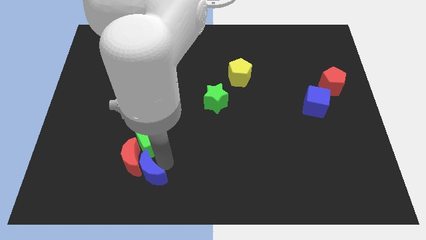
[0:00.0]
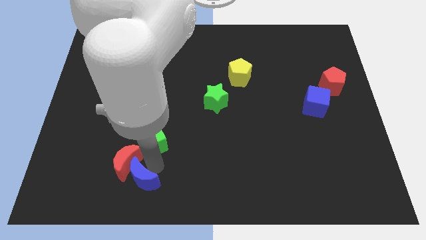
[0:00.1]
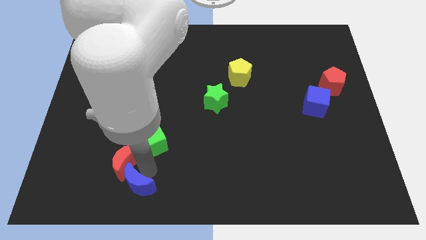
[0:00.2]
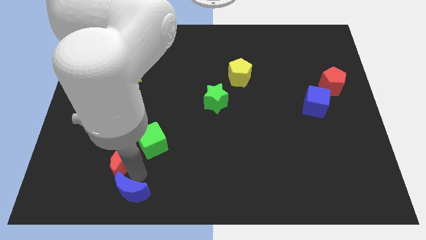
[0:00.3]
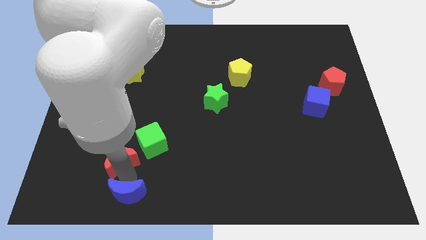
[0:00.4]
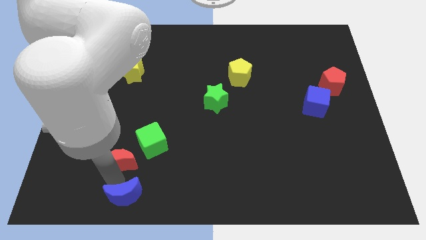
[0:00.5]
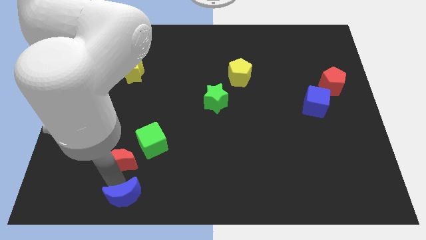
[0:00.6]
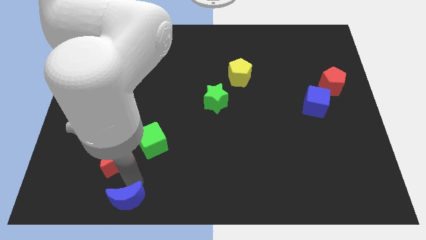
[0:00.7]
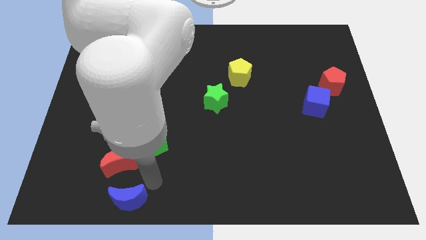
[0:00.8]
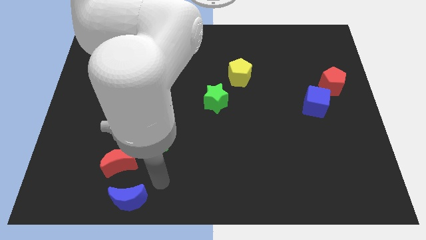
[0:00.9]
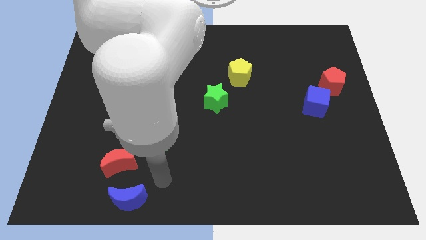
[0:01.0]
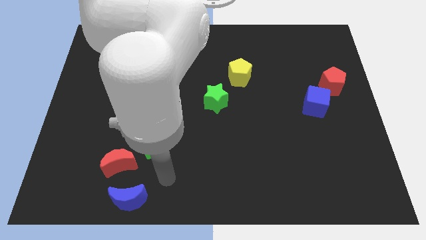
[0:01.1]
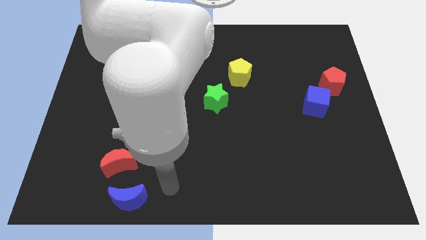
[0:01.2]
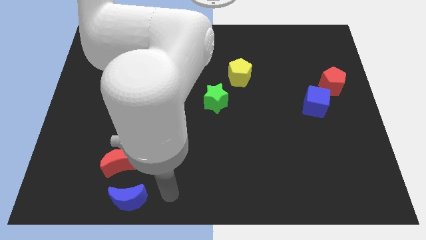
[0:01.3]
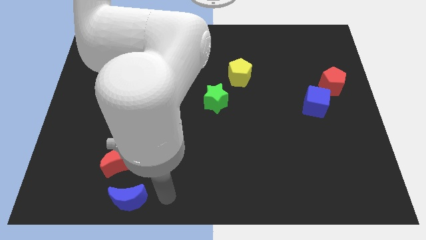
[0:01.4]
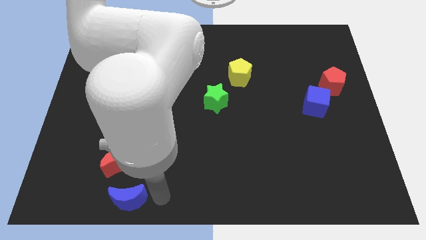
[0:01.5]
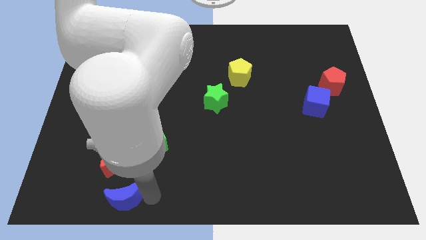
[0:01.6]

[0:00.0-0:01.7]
move the blue crescent to the bottom of the red crescent

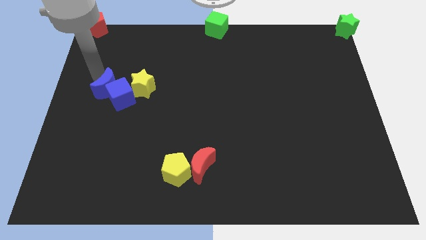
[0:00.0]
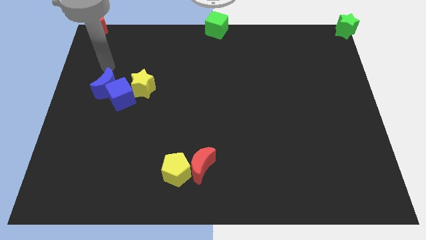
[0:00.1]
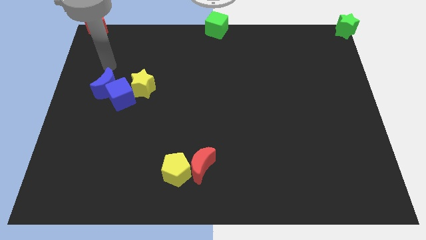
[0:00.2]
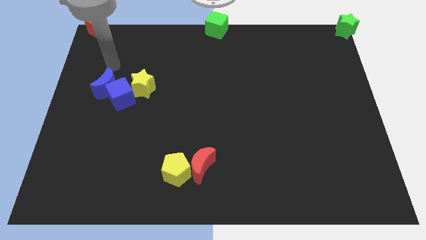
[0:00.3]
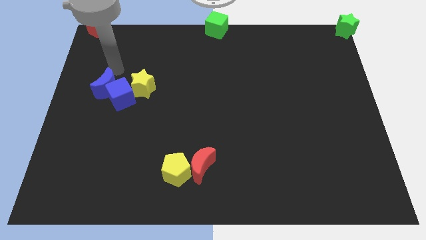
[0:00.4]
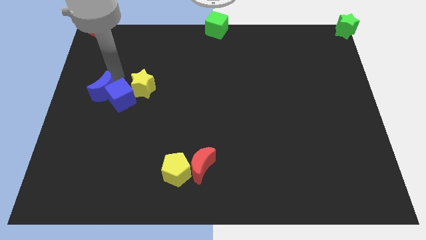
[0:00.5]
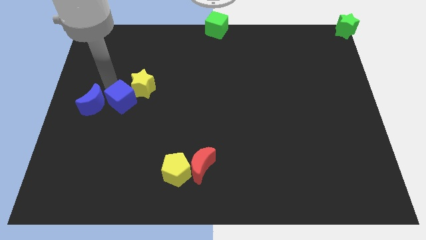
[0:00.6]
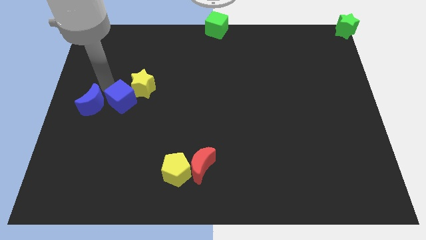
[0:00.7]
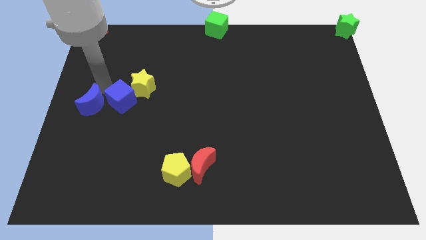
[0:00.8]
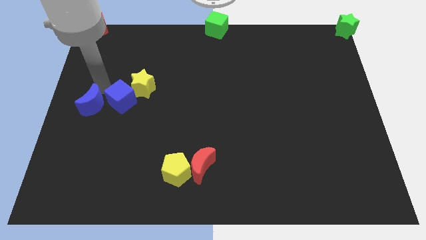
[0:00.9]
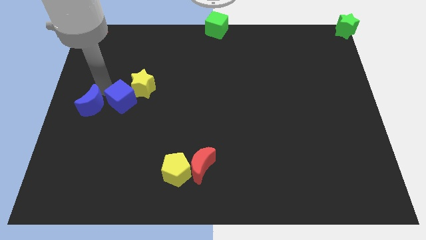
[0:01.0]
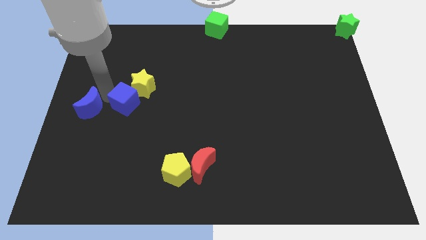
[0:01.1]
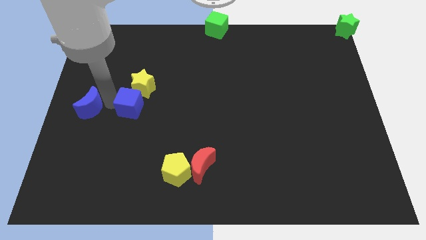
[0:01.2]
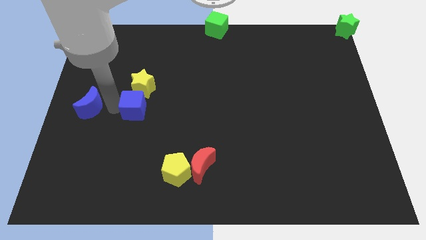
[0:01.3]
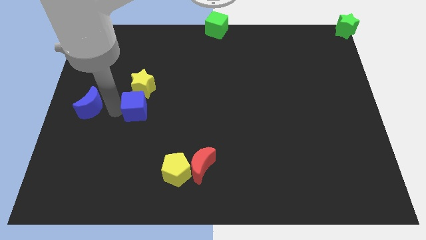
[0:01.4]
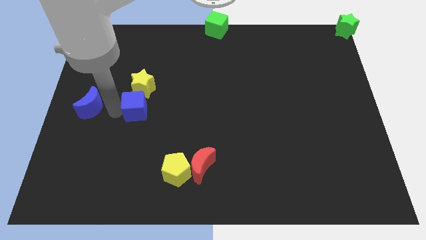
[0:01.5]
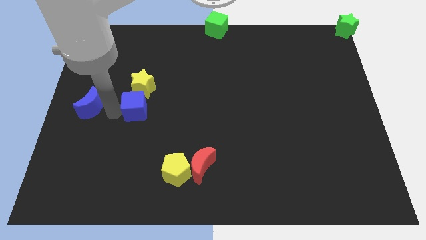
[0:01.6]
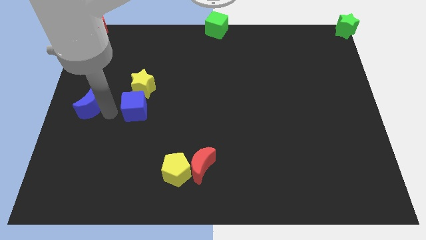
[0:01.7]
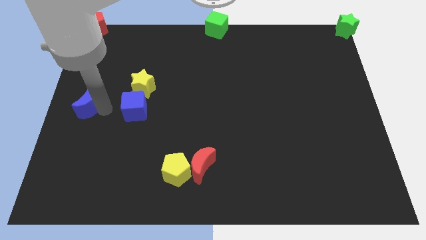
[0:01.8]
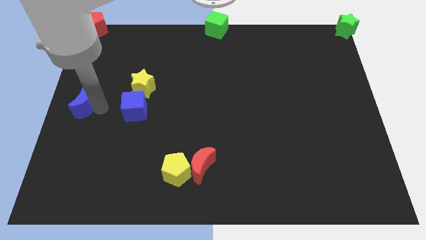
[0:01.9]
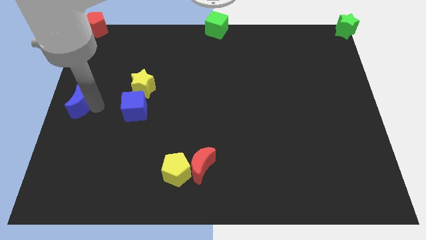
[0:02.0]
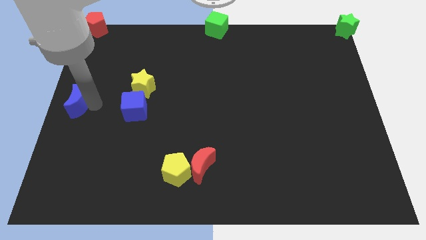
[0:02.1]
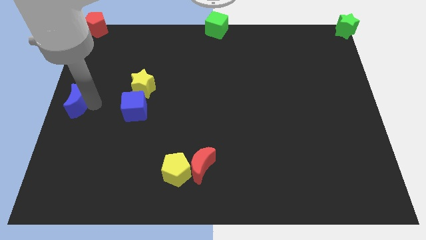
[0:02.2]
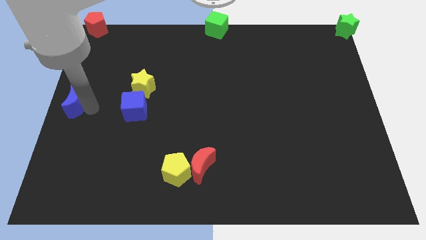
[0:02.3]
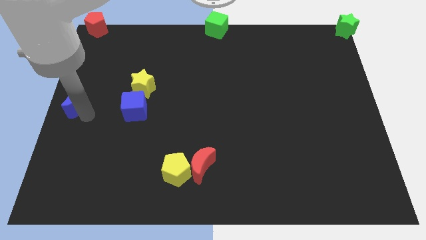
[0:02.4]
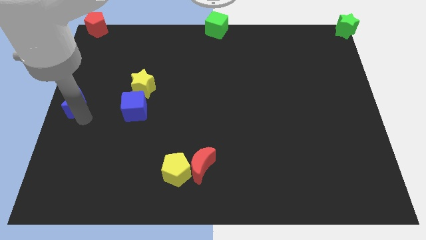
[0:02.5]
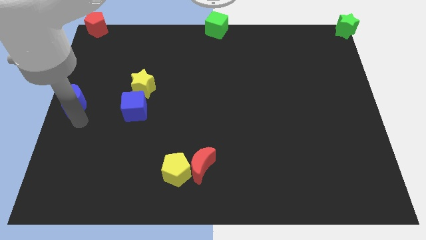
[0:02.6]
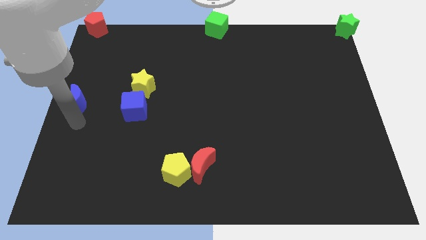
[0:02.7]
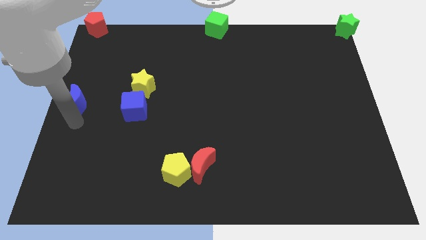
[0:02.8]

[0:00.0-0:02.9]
separate the blue moon and blue cube

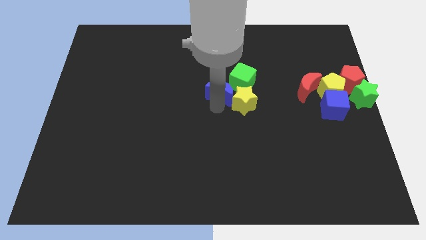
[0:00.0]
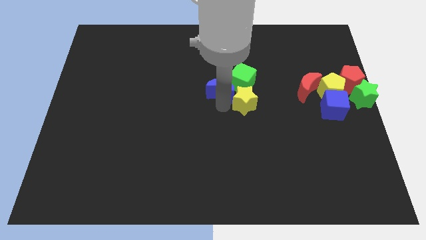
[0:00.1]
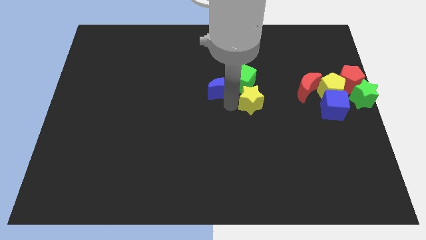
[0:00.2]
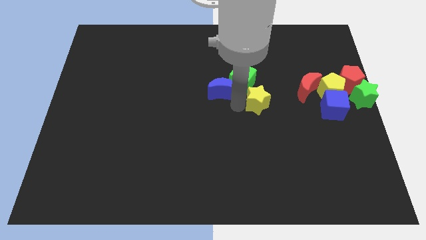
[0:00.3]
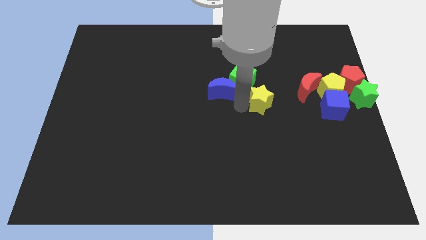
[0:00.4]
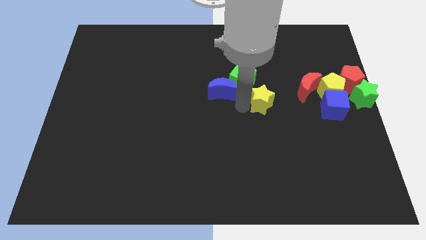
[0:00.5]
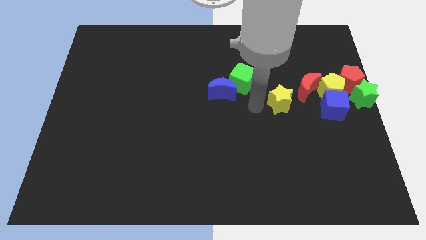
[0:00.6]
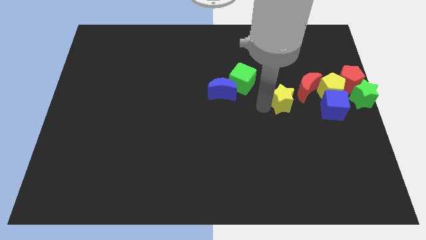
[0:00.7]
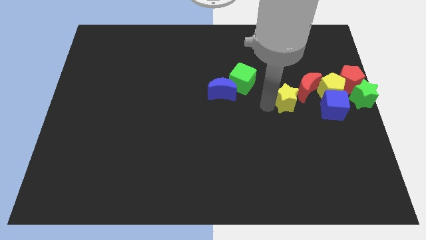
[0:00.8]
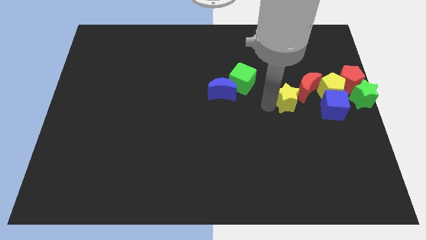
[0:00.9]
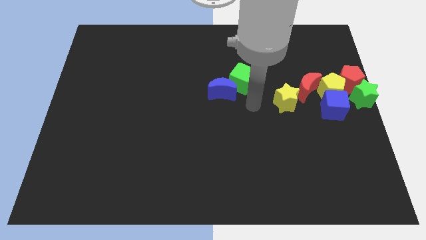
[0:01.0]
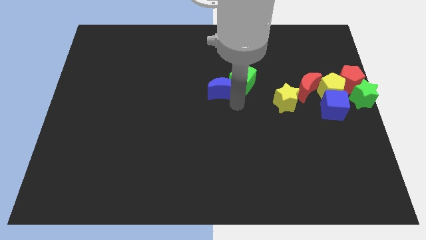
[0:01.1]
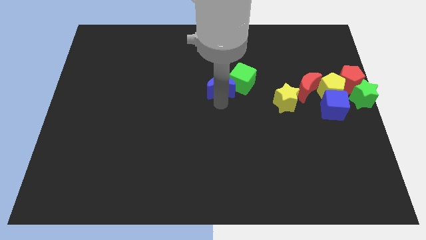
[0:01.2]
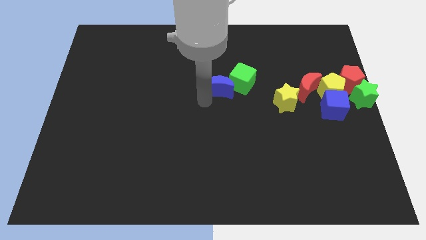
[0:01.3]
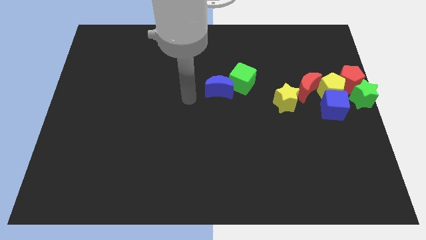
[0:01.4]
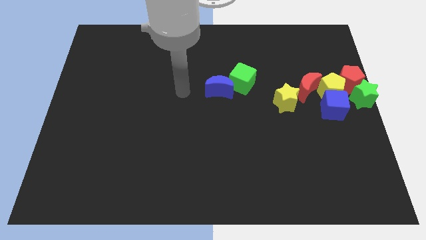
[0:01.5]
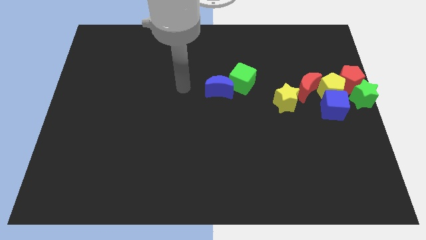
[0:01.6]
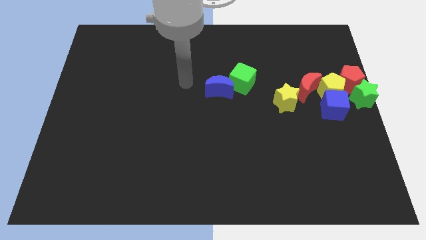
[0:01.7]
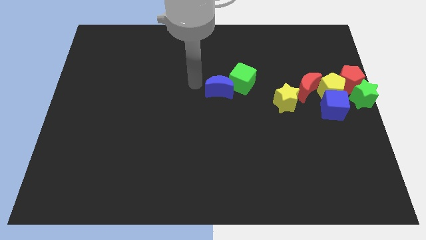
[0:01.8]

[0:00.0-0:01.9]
push the yellow star close to red moon

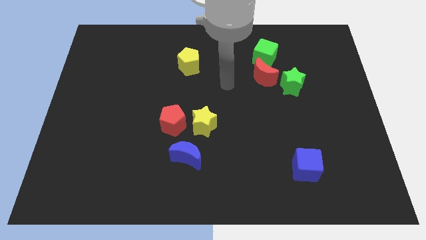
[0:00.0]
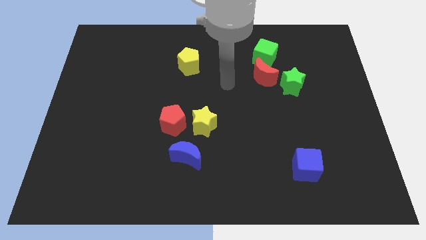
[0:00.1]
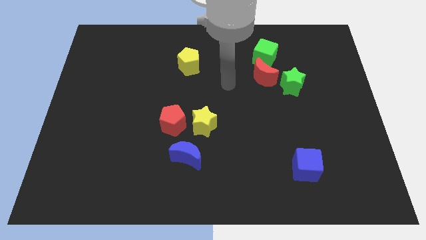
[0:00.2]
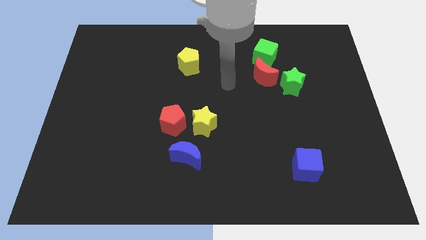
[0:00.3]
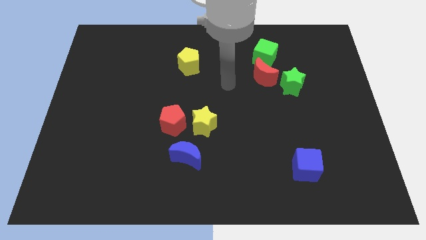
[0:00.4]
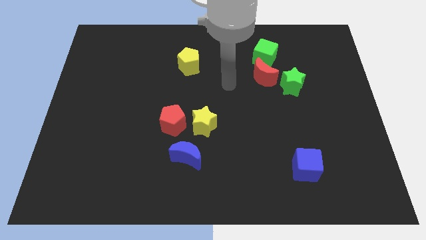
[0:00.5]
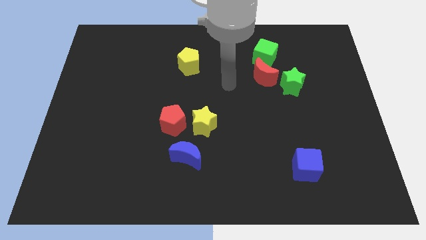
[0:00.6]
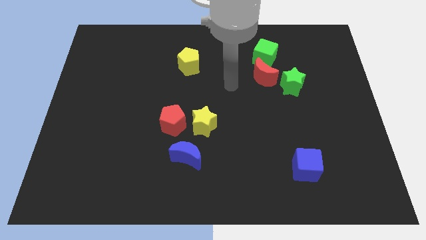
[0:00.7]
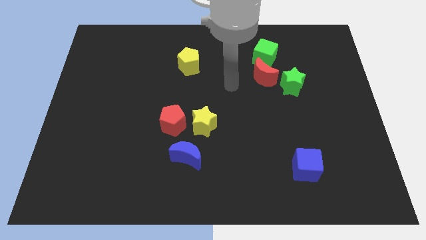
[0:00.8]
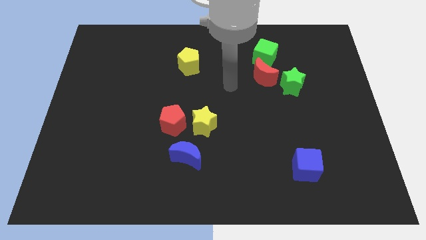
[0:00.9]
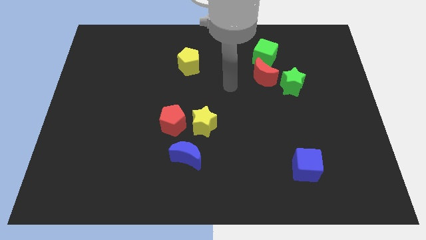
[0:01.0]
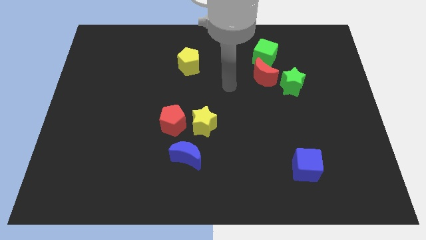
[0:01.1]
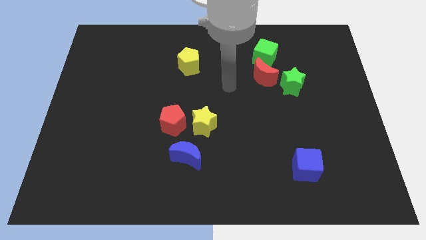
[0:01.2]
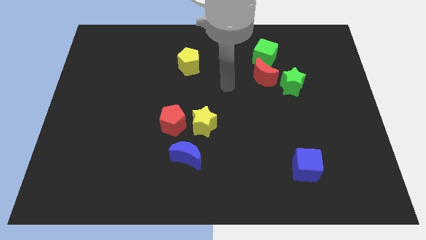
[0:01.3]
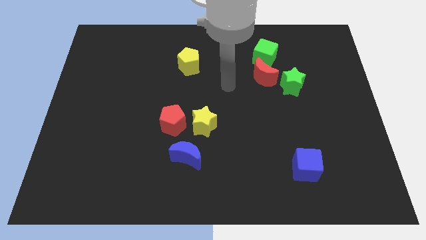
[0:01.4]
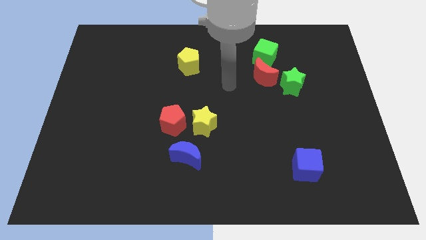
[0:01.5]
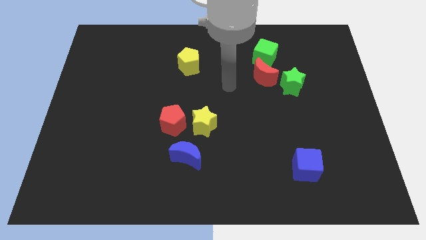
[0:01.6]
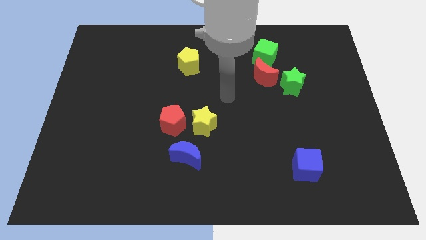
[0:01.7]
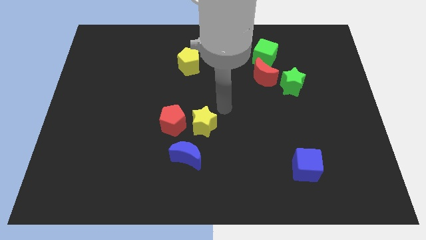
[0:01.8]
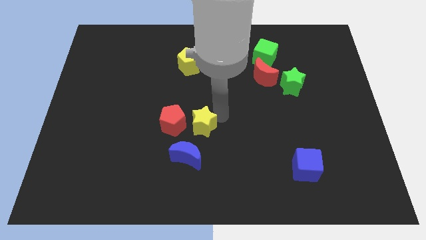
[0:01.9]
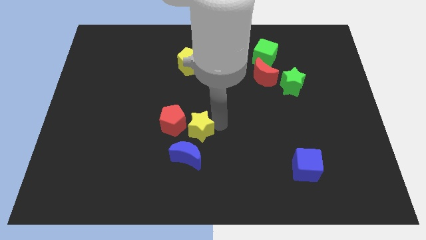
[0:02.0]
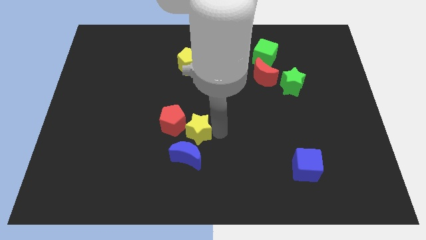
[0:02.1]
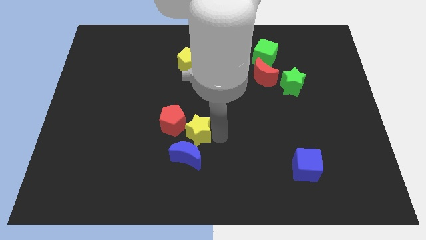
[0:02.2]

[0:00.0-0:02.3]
move the yellow star slightly to the bottom

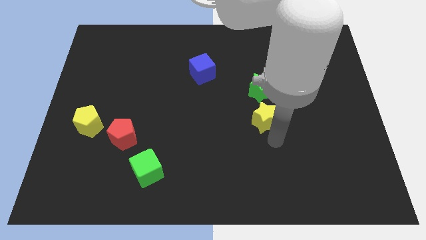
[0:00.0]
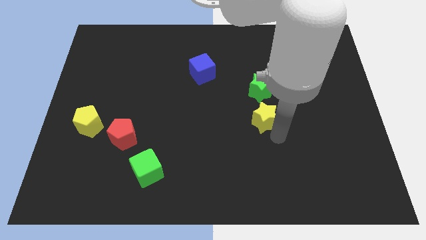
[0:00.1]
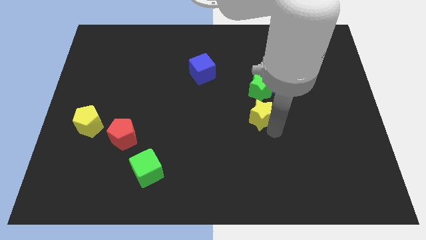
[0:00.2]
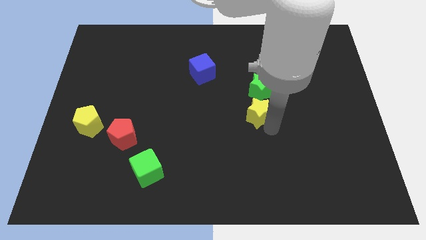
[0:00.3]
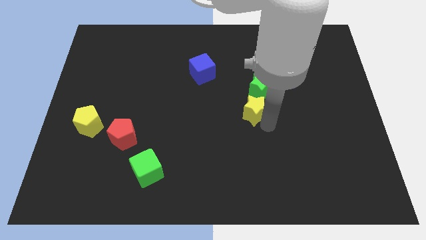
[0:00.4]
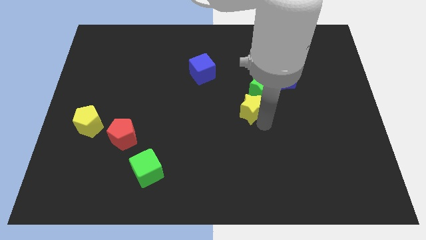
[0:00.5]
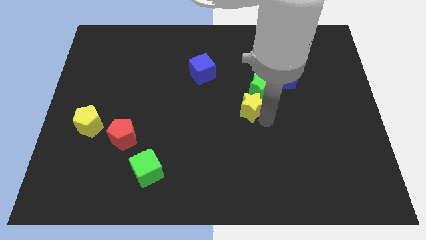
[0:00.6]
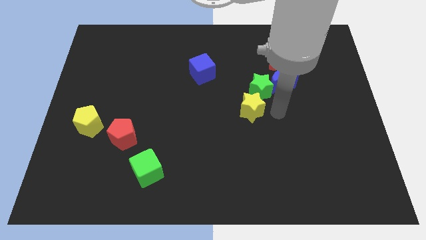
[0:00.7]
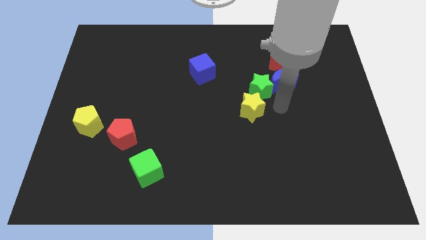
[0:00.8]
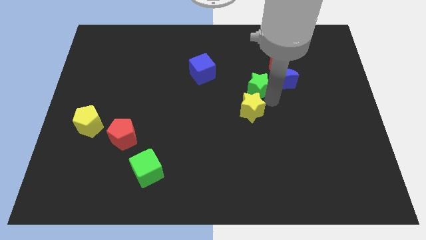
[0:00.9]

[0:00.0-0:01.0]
place yellow star diagonal bottom left of green star
